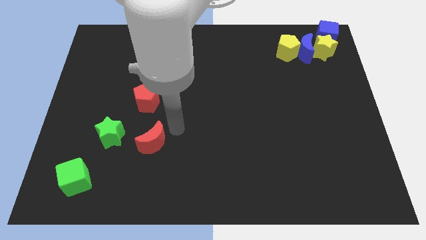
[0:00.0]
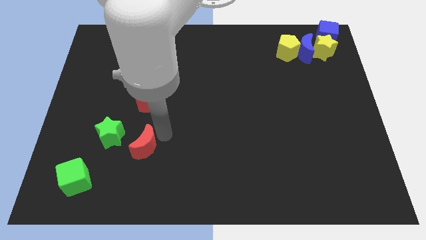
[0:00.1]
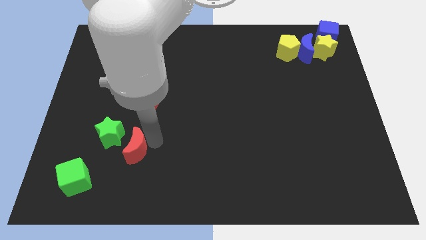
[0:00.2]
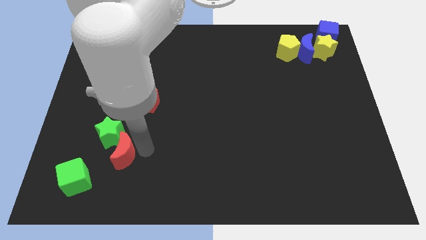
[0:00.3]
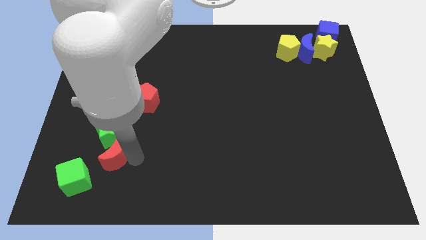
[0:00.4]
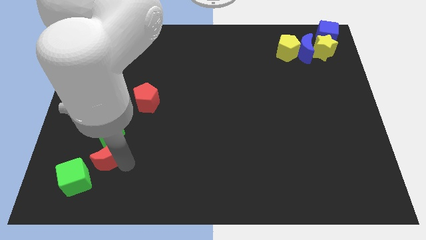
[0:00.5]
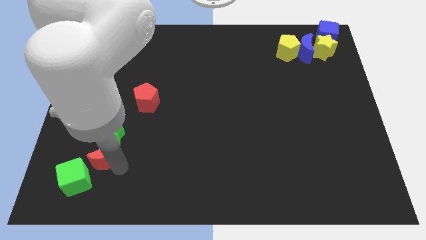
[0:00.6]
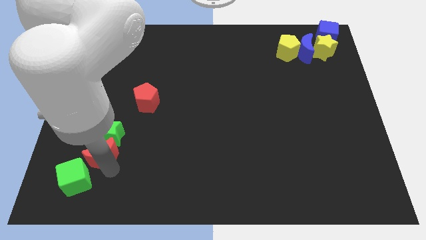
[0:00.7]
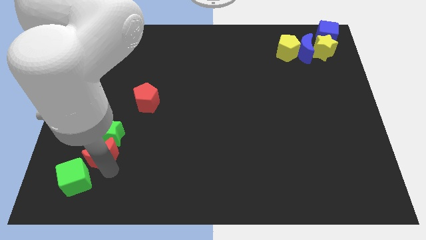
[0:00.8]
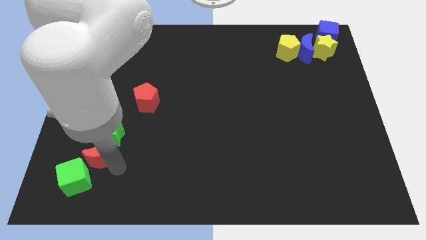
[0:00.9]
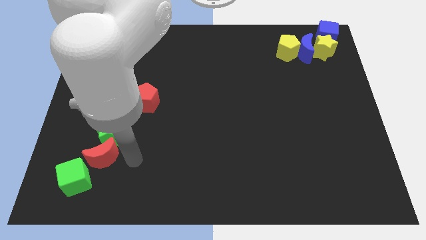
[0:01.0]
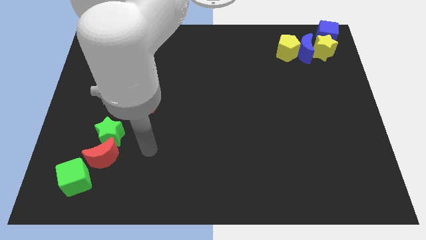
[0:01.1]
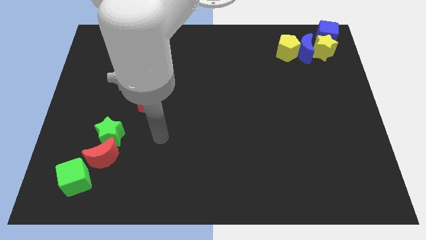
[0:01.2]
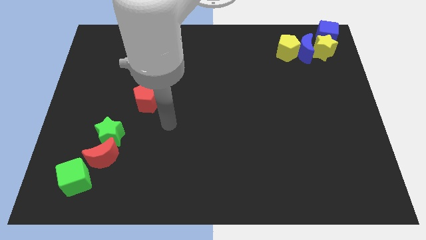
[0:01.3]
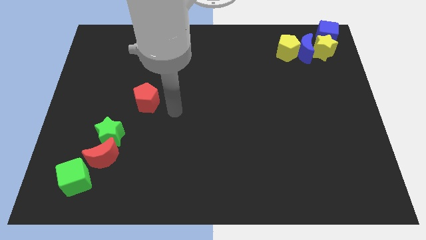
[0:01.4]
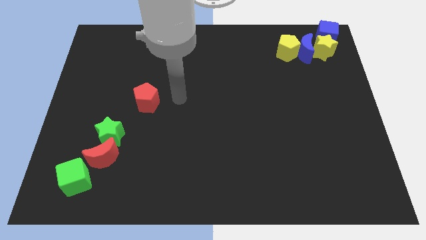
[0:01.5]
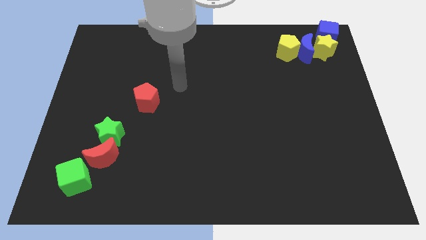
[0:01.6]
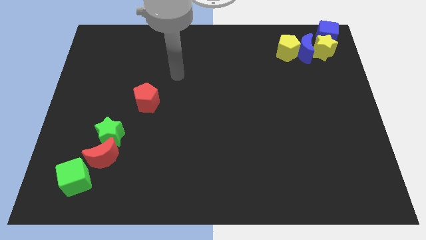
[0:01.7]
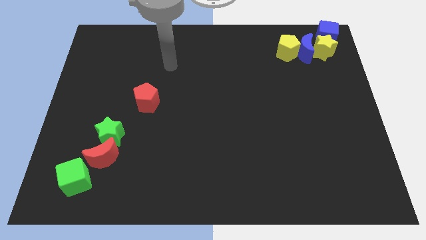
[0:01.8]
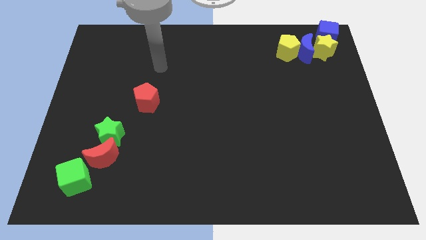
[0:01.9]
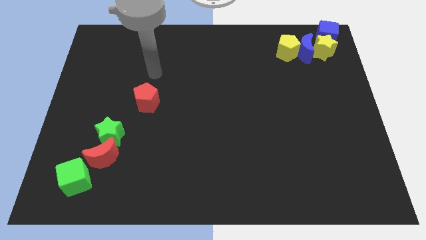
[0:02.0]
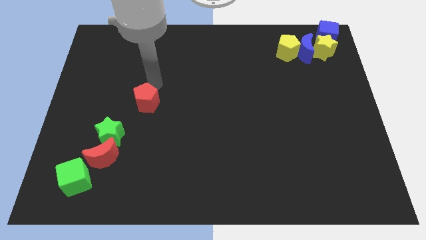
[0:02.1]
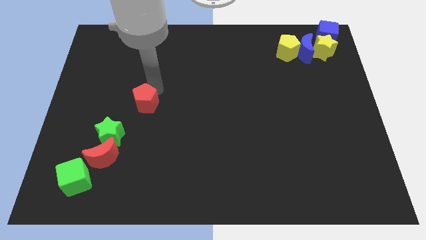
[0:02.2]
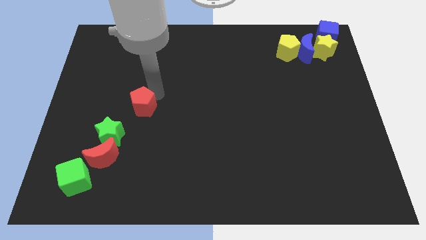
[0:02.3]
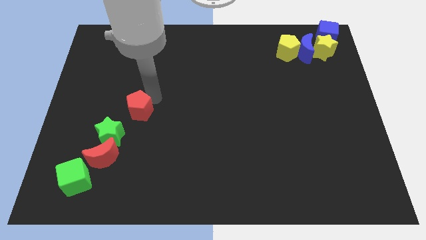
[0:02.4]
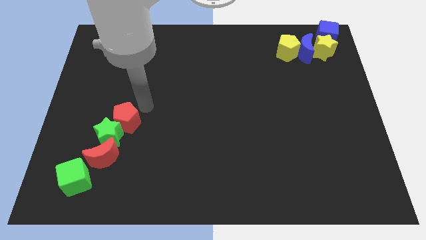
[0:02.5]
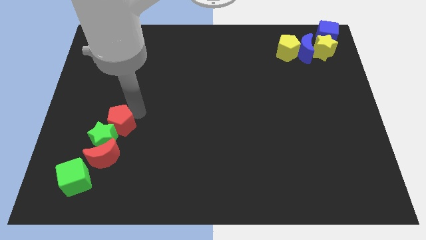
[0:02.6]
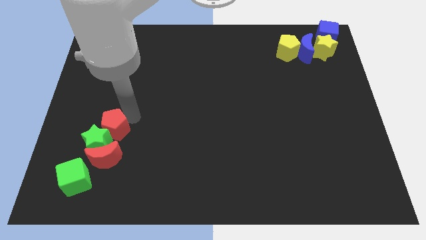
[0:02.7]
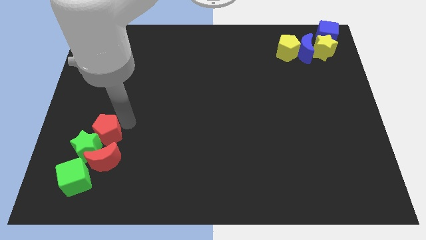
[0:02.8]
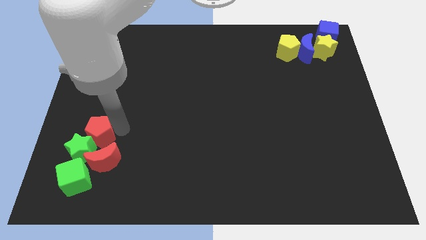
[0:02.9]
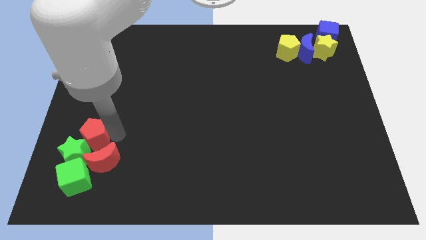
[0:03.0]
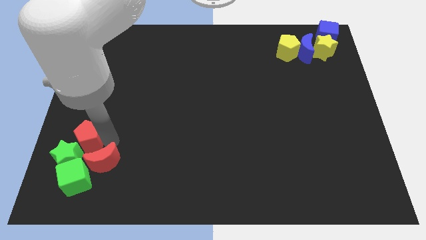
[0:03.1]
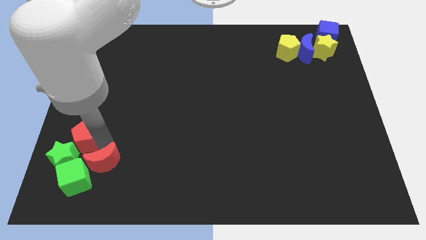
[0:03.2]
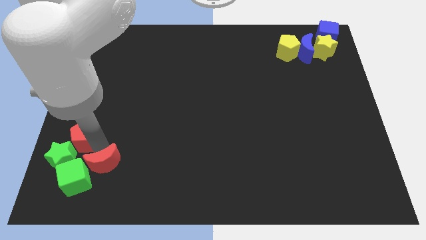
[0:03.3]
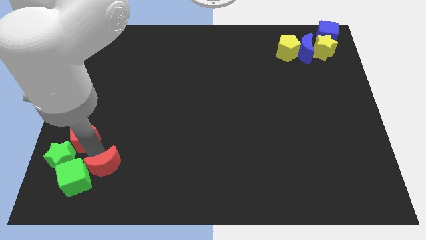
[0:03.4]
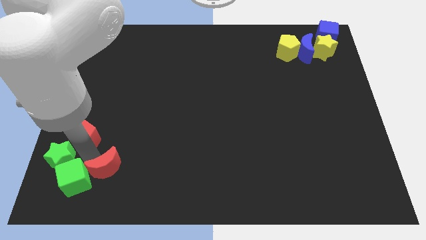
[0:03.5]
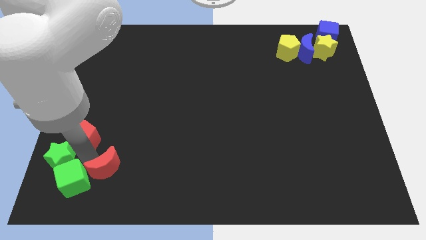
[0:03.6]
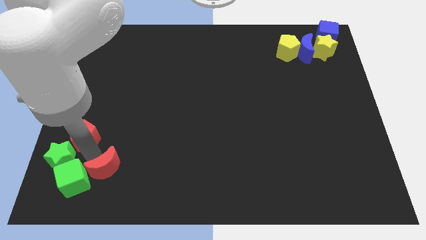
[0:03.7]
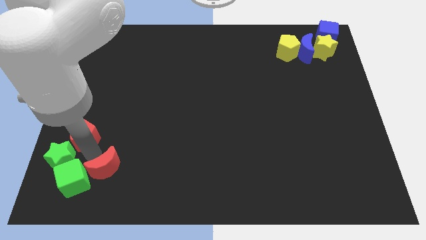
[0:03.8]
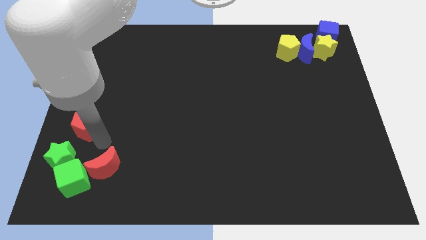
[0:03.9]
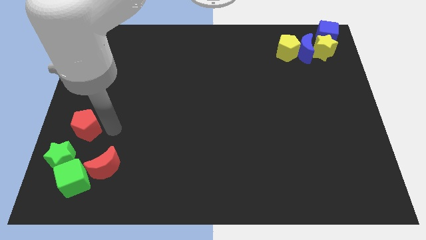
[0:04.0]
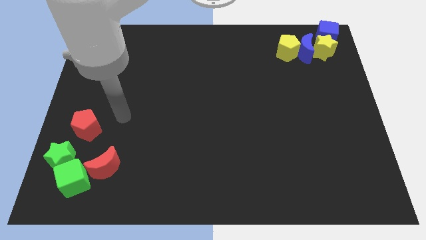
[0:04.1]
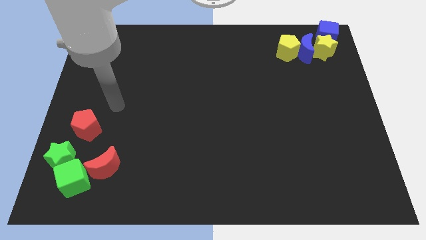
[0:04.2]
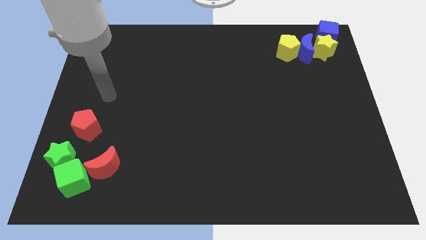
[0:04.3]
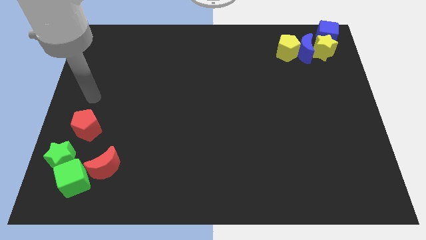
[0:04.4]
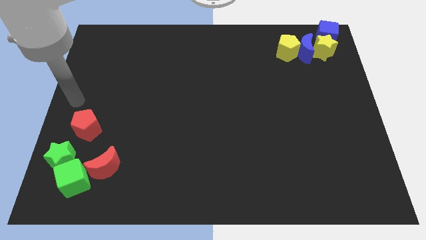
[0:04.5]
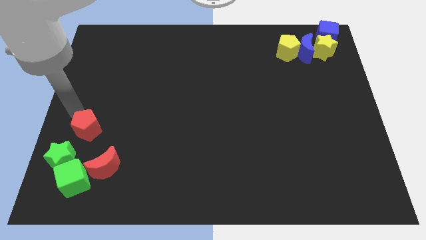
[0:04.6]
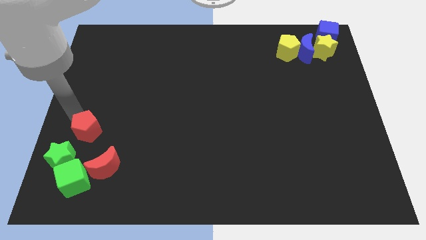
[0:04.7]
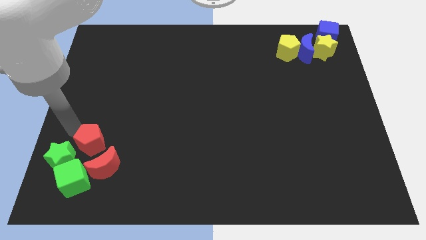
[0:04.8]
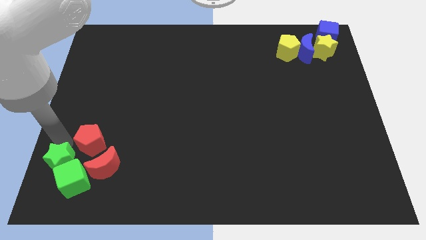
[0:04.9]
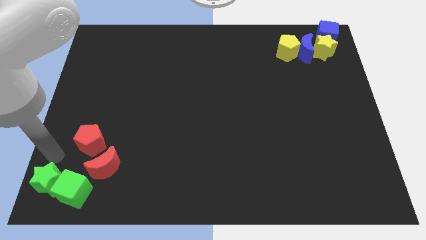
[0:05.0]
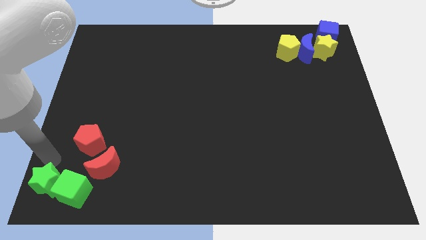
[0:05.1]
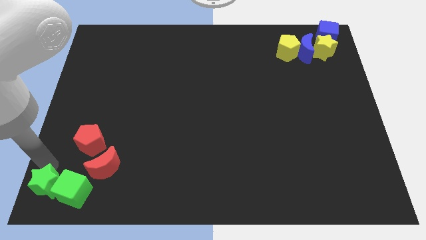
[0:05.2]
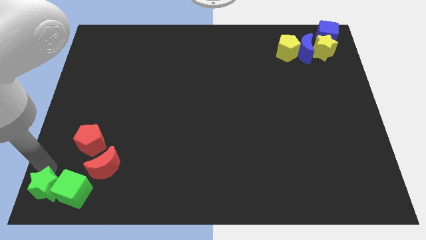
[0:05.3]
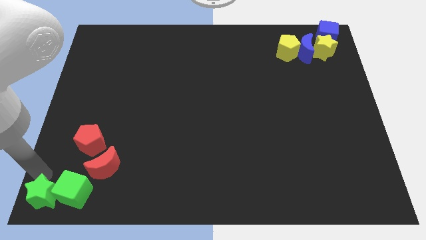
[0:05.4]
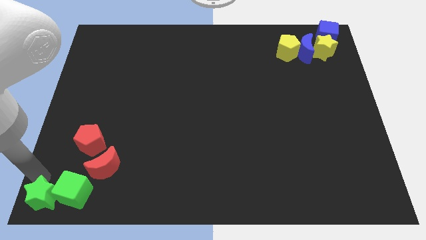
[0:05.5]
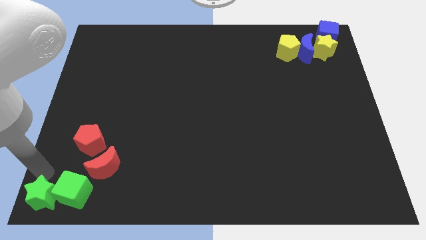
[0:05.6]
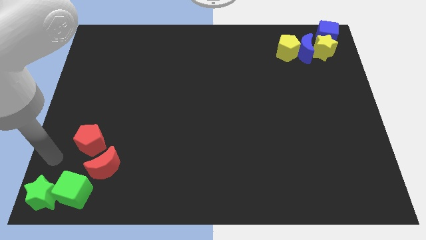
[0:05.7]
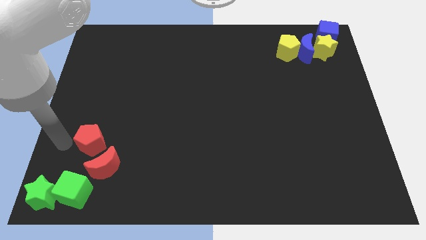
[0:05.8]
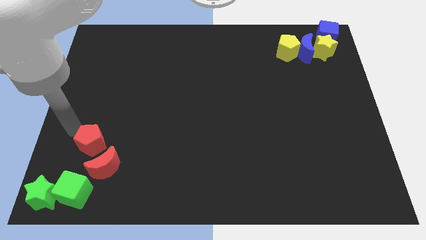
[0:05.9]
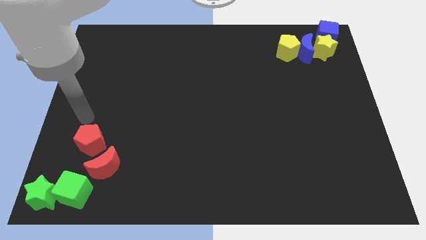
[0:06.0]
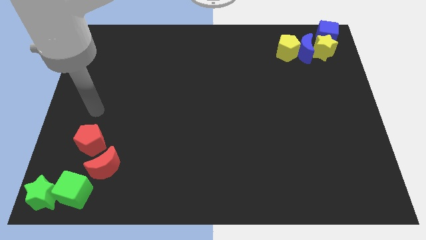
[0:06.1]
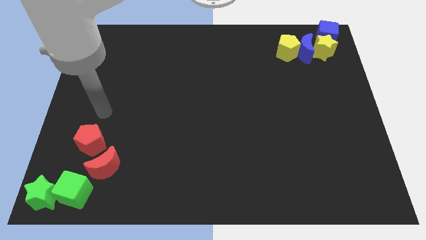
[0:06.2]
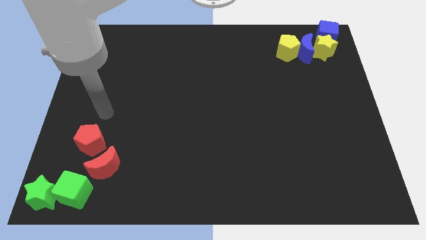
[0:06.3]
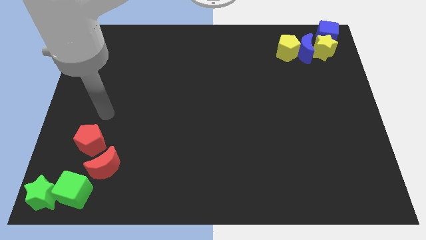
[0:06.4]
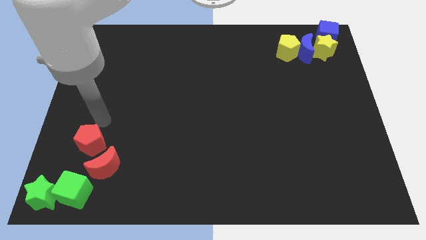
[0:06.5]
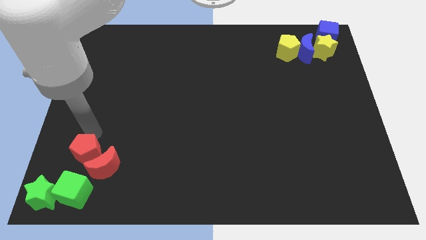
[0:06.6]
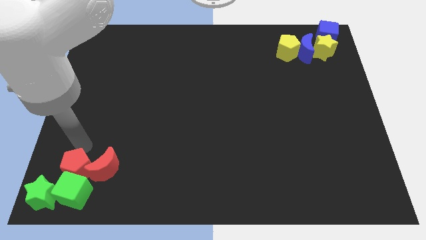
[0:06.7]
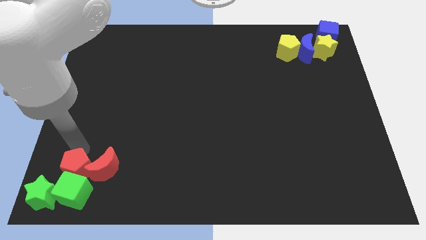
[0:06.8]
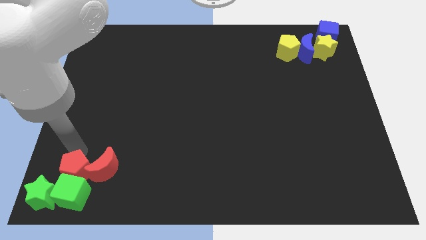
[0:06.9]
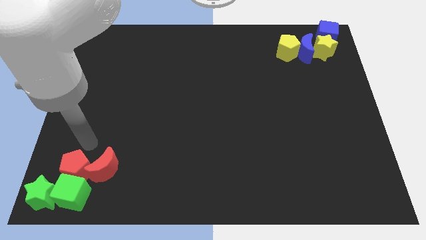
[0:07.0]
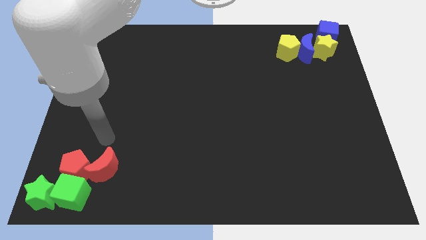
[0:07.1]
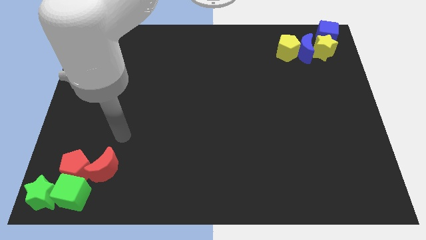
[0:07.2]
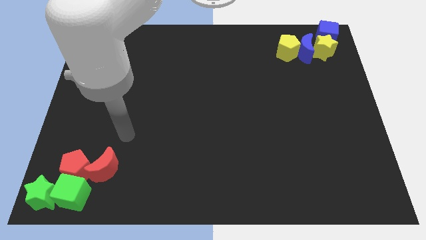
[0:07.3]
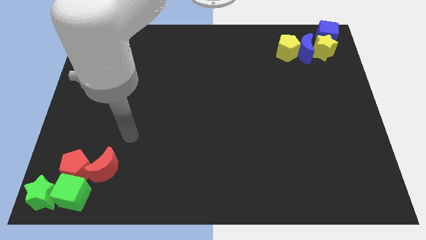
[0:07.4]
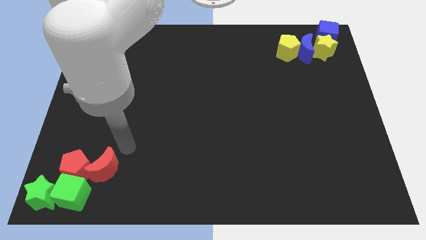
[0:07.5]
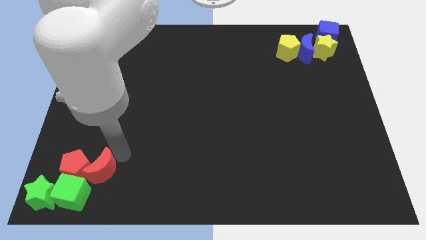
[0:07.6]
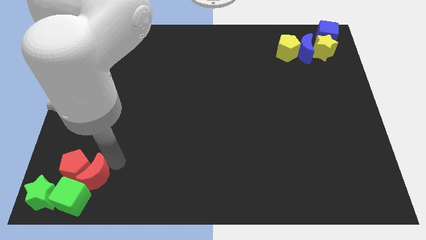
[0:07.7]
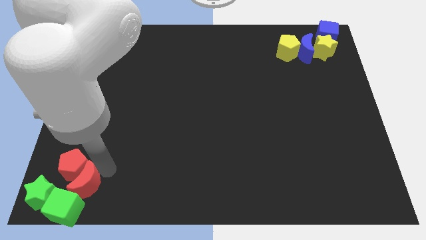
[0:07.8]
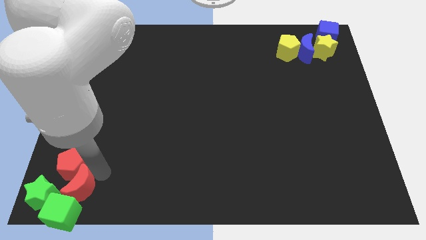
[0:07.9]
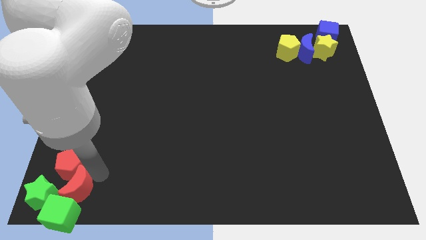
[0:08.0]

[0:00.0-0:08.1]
push the red and green blocks to the bottom left corner of the board

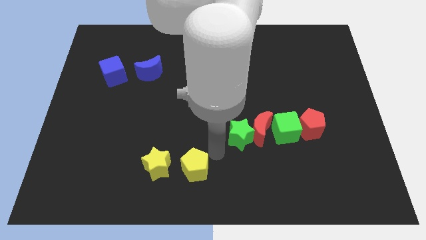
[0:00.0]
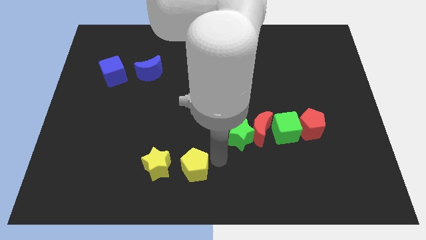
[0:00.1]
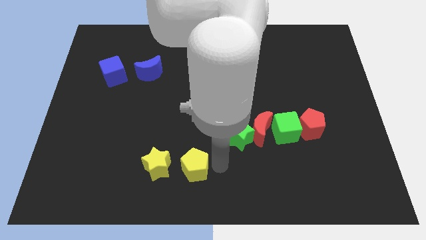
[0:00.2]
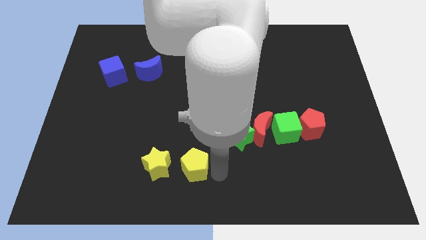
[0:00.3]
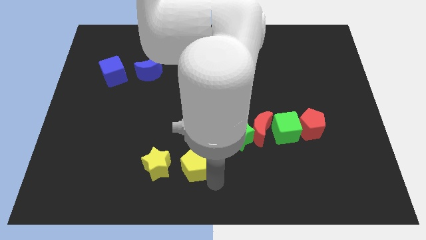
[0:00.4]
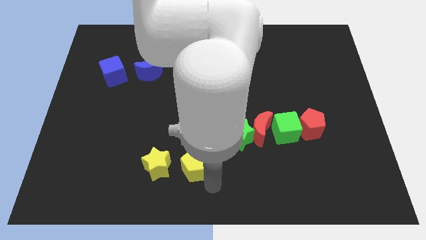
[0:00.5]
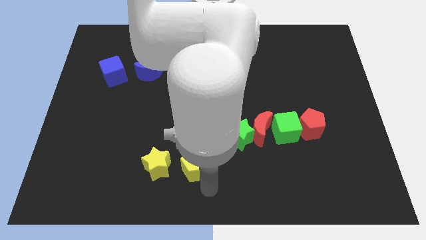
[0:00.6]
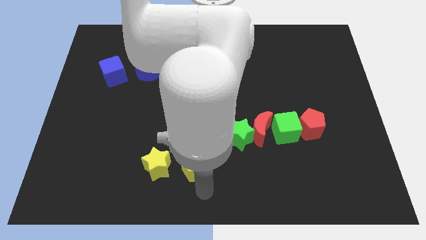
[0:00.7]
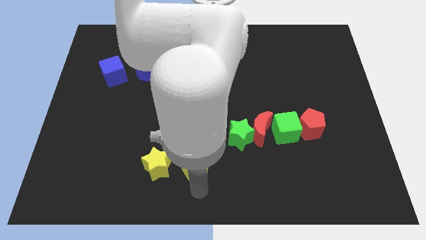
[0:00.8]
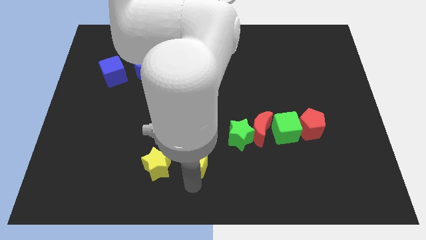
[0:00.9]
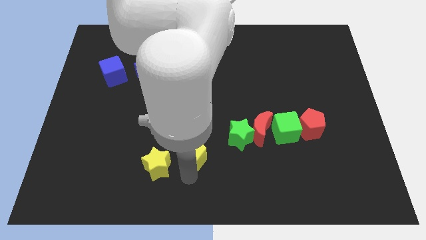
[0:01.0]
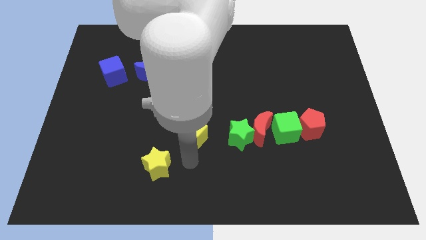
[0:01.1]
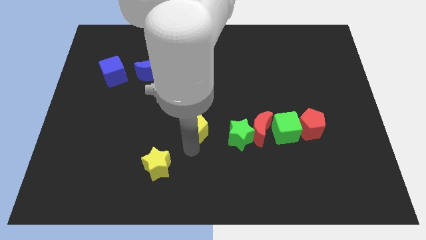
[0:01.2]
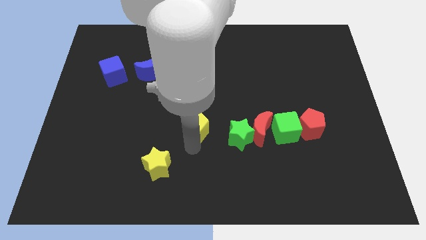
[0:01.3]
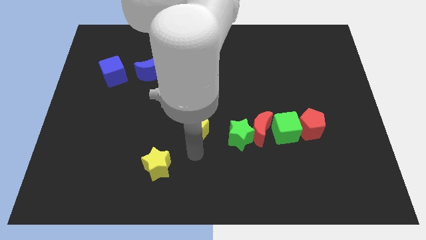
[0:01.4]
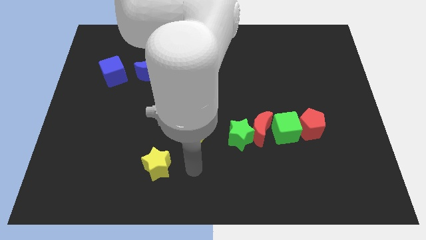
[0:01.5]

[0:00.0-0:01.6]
put the yellow pentagon diagonally on the top right side of the yellow star
